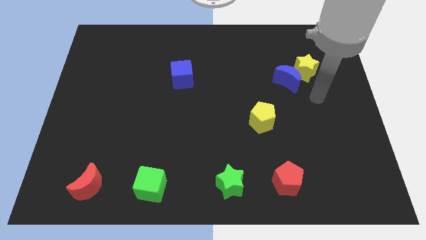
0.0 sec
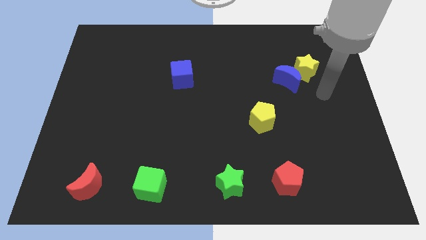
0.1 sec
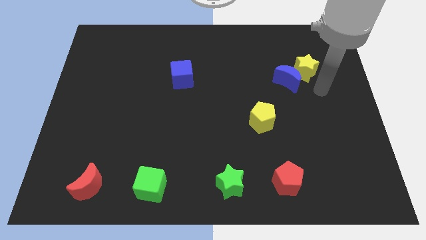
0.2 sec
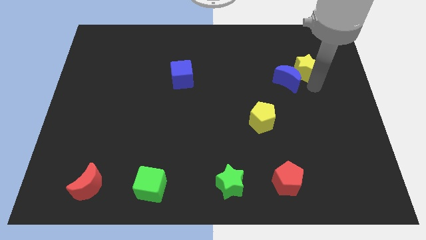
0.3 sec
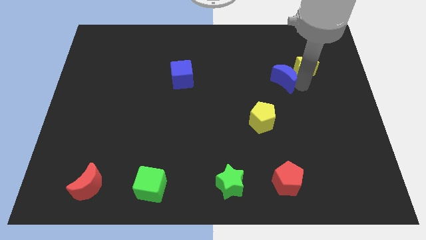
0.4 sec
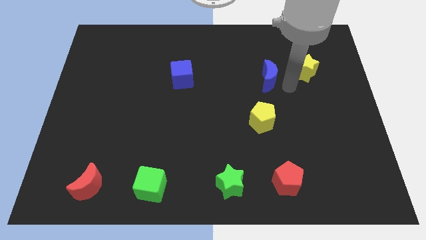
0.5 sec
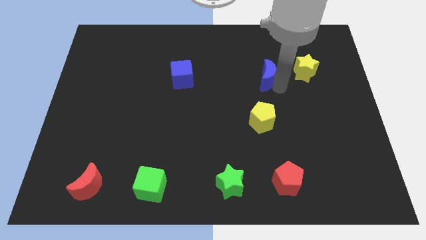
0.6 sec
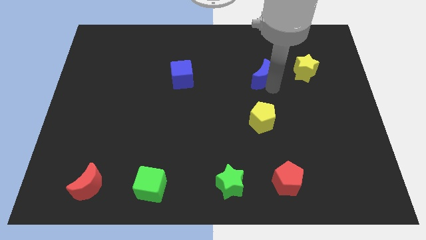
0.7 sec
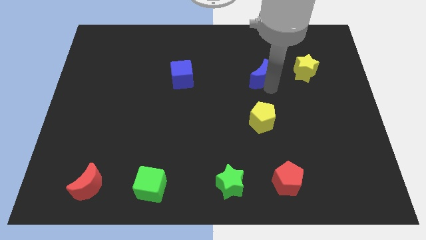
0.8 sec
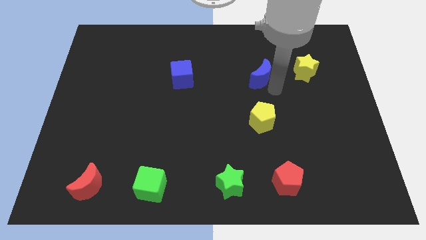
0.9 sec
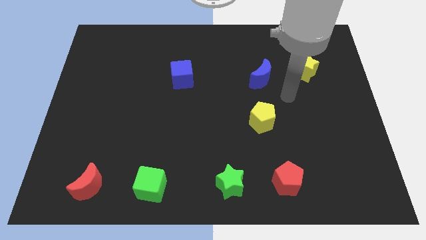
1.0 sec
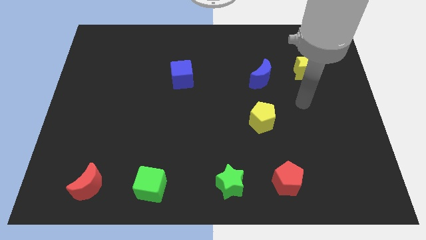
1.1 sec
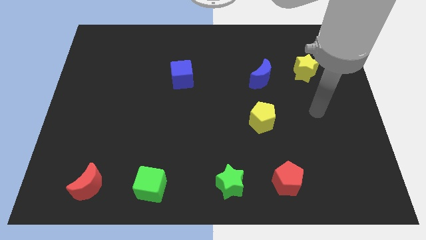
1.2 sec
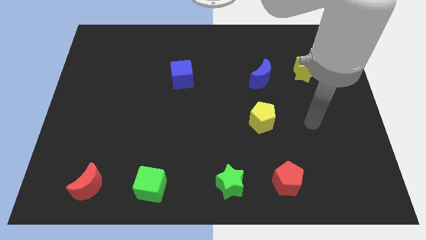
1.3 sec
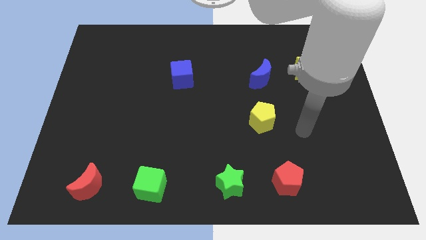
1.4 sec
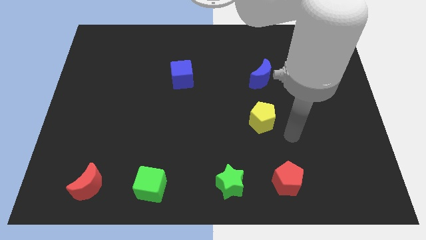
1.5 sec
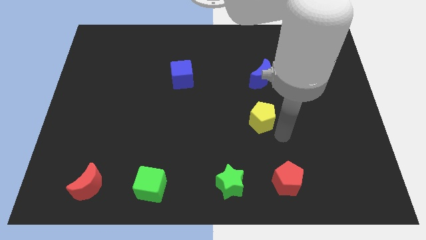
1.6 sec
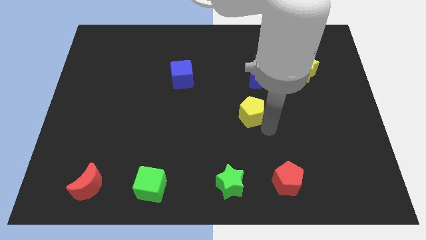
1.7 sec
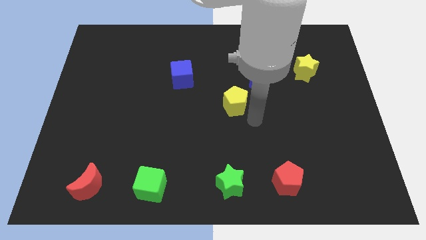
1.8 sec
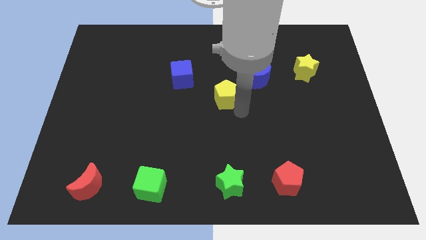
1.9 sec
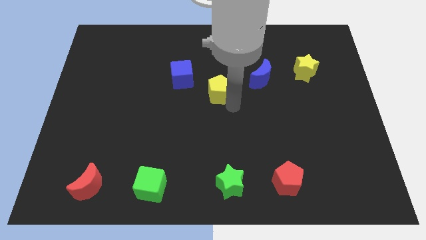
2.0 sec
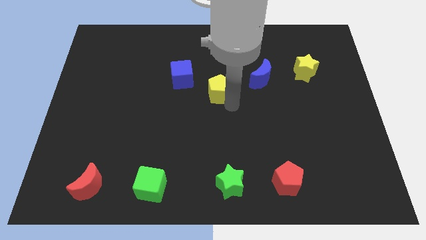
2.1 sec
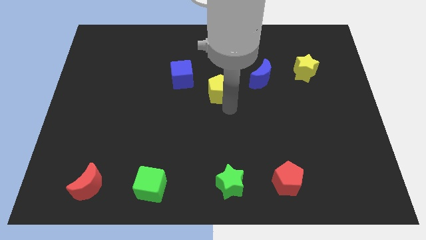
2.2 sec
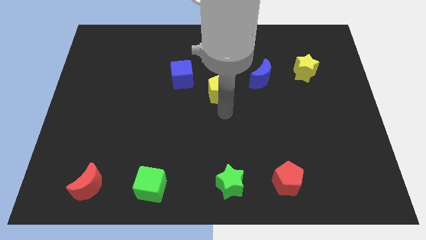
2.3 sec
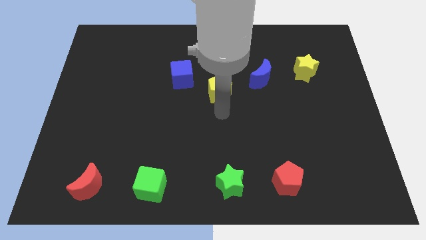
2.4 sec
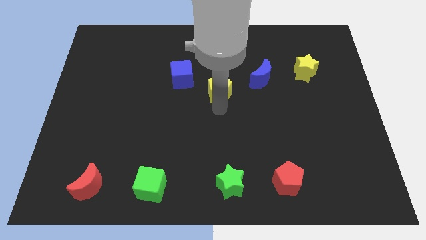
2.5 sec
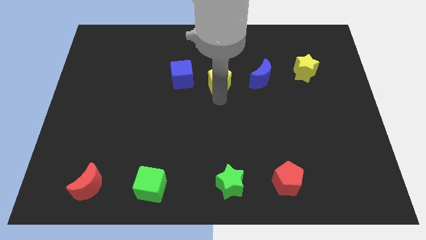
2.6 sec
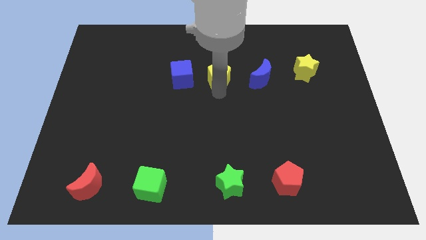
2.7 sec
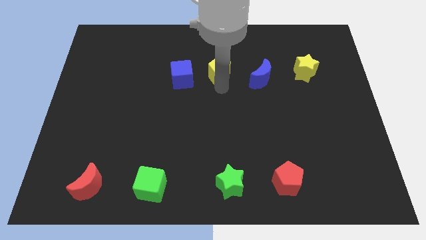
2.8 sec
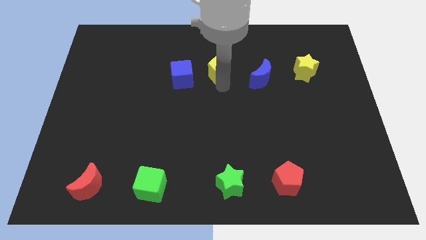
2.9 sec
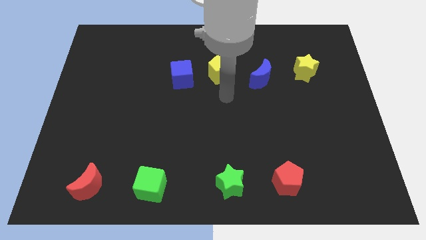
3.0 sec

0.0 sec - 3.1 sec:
place the yellow pentagon horizontal parallel to the blue cube

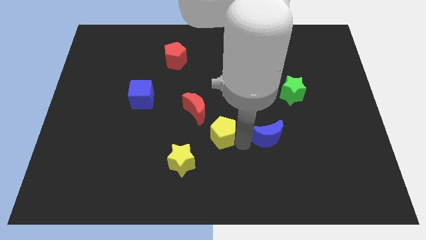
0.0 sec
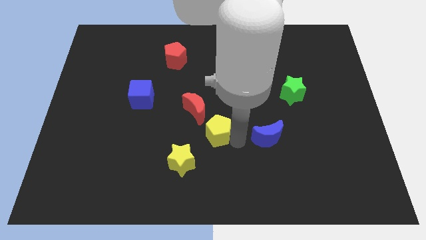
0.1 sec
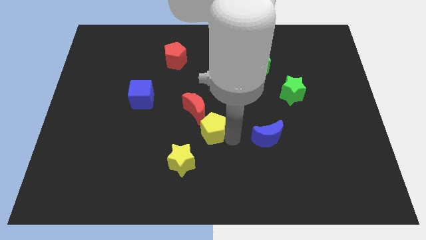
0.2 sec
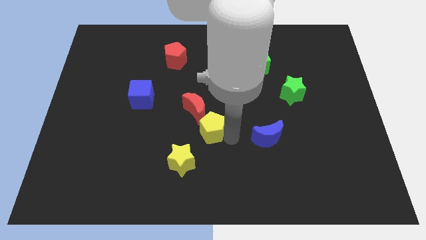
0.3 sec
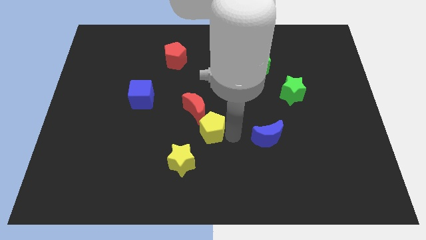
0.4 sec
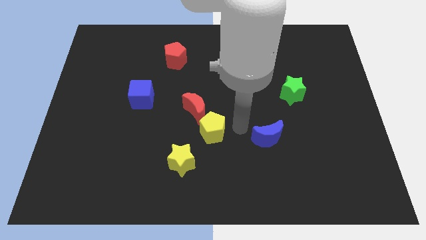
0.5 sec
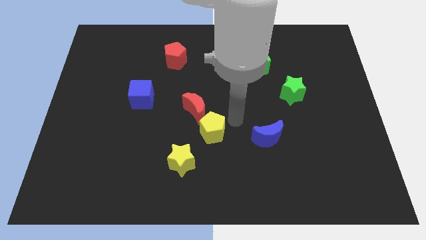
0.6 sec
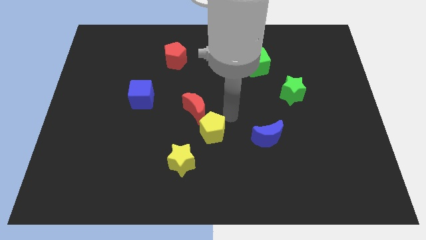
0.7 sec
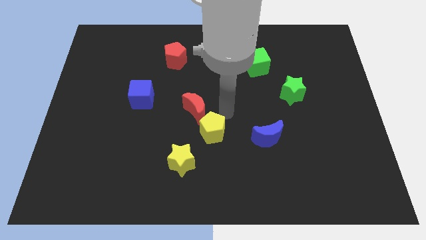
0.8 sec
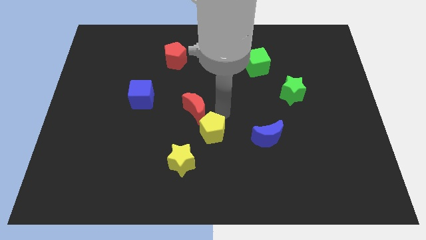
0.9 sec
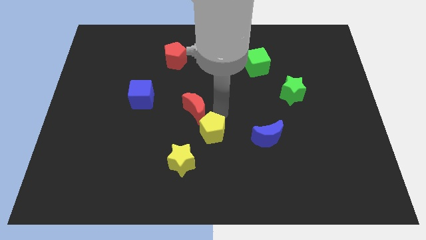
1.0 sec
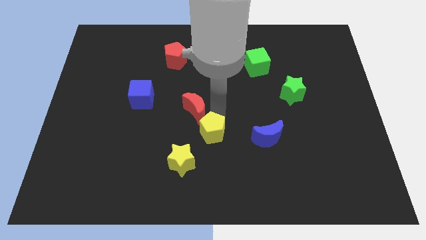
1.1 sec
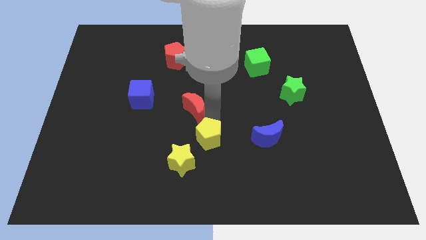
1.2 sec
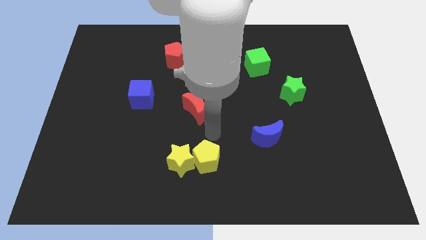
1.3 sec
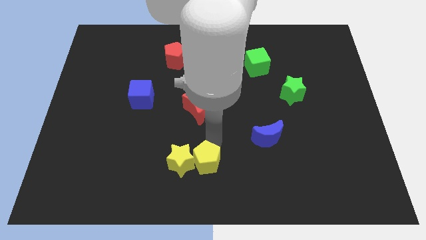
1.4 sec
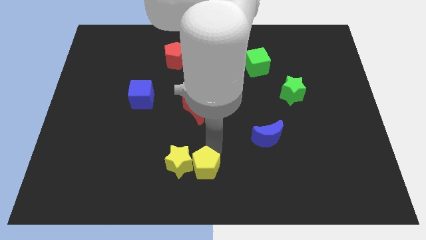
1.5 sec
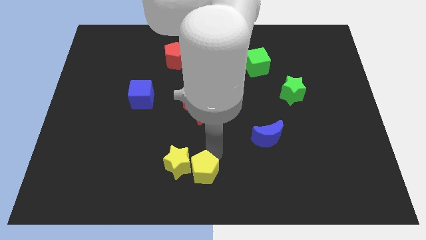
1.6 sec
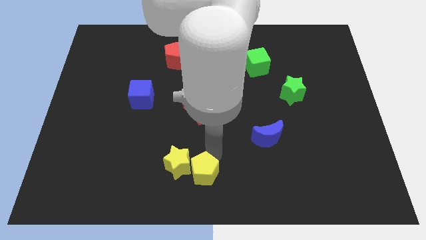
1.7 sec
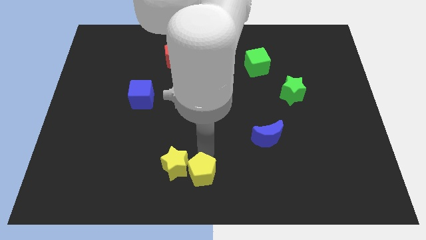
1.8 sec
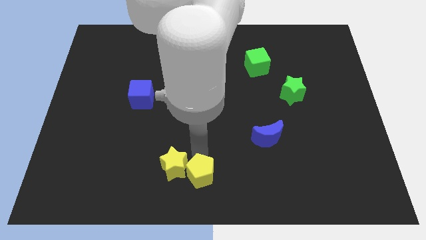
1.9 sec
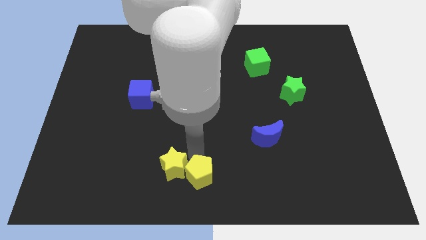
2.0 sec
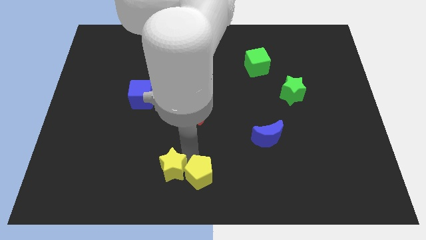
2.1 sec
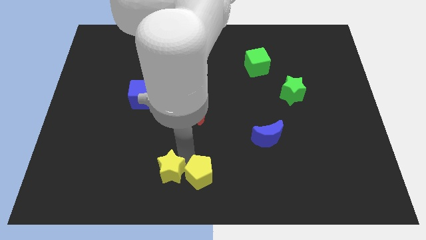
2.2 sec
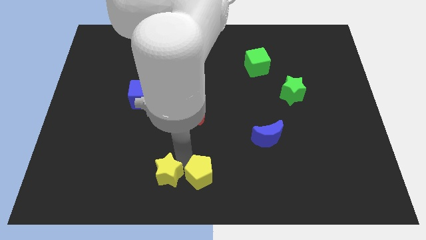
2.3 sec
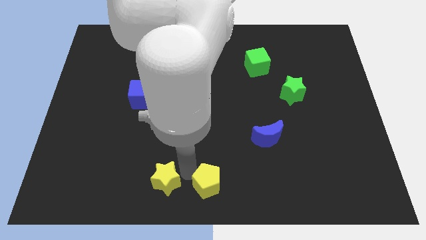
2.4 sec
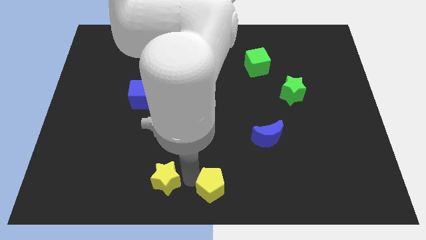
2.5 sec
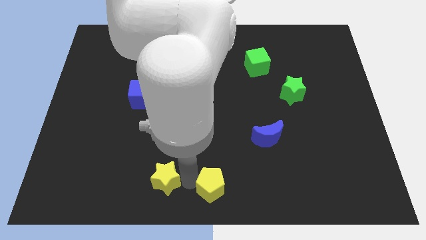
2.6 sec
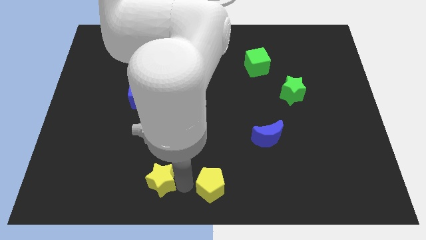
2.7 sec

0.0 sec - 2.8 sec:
move the yellow pentagon to the right of the yellow star

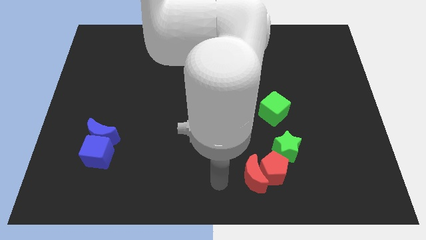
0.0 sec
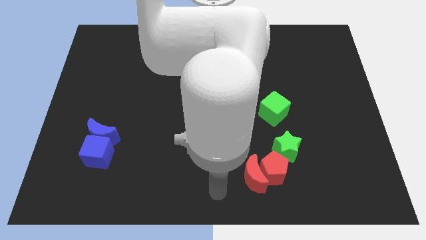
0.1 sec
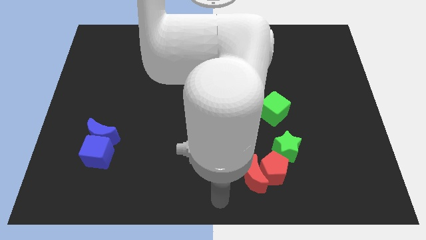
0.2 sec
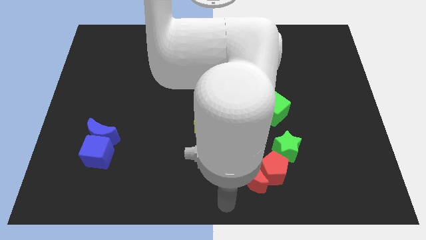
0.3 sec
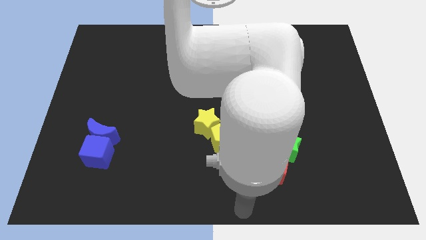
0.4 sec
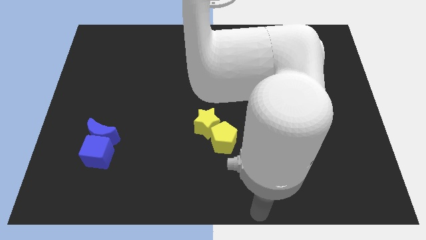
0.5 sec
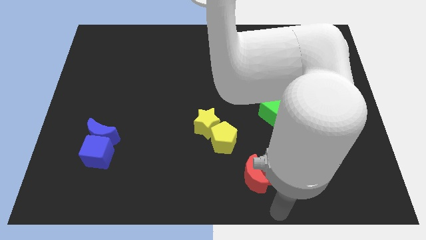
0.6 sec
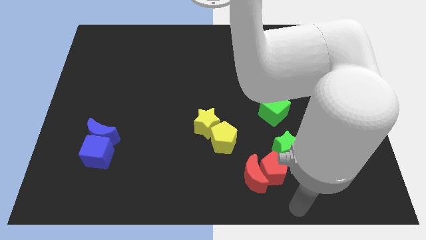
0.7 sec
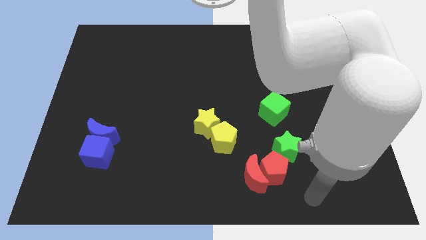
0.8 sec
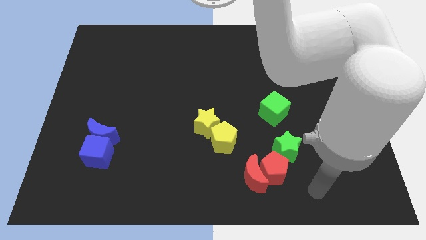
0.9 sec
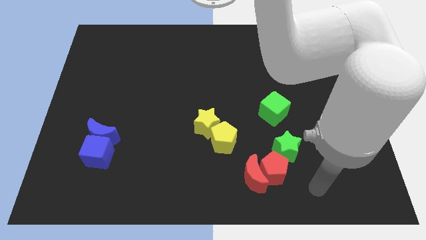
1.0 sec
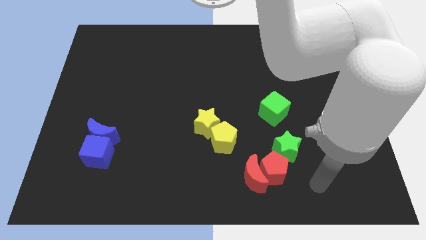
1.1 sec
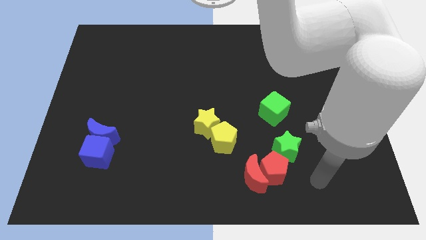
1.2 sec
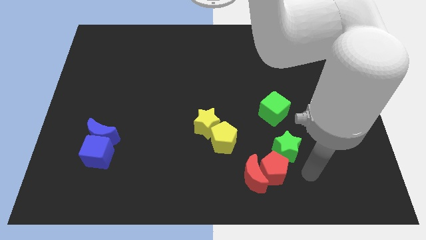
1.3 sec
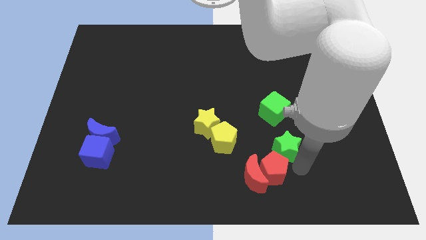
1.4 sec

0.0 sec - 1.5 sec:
move your arm towards the green star

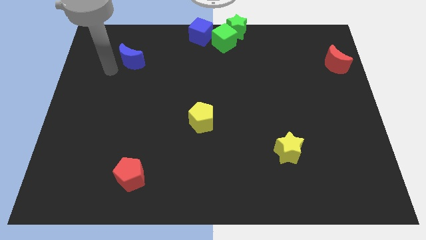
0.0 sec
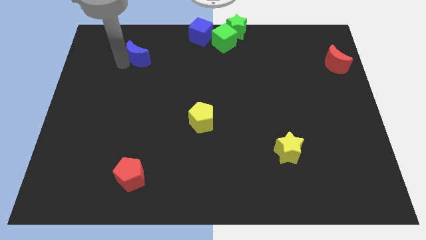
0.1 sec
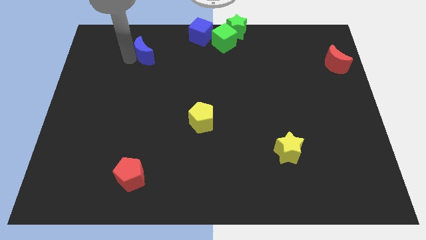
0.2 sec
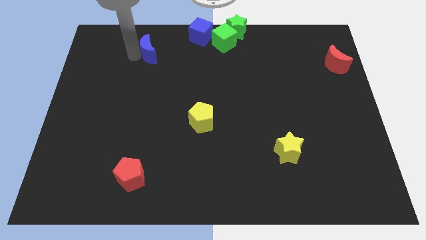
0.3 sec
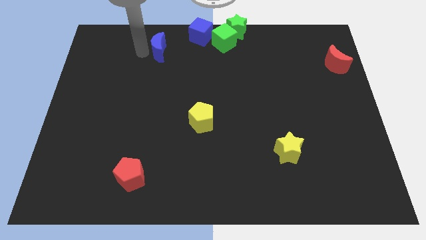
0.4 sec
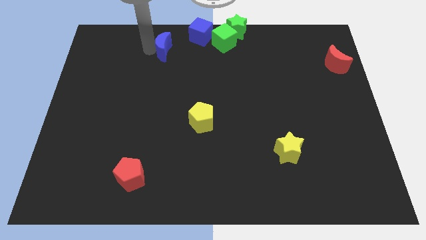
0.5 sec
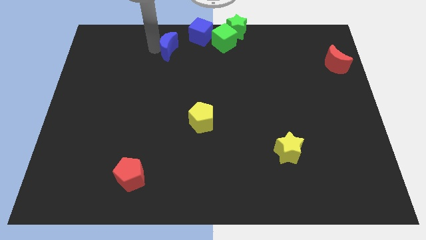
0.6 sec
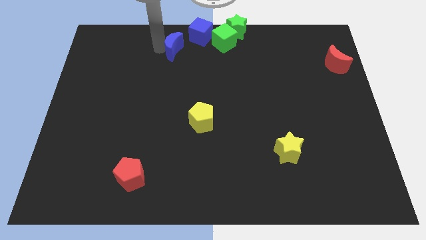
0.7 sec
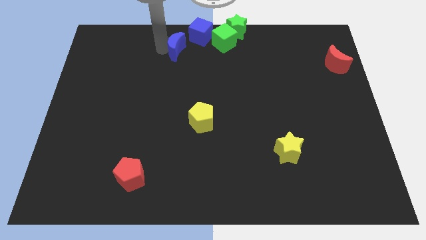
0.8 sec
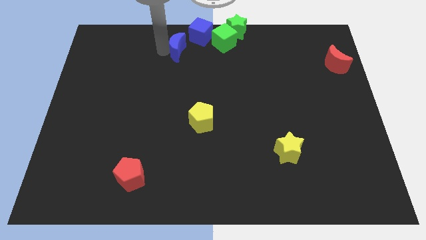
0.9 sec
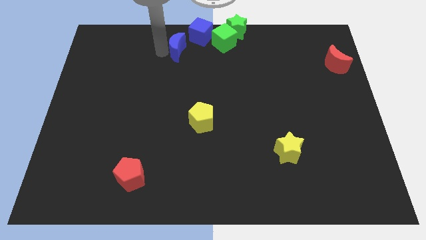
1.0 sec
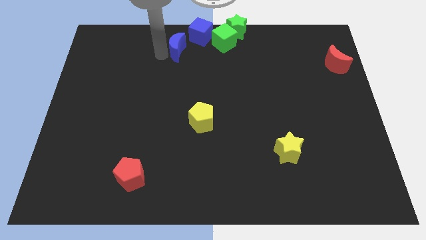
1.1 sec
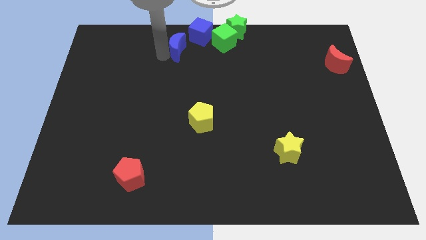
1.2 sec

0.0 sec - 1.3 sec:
move the blue crescent towards the blue cube

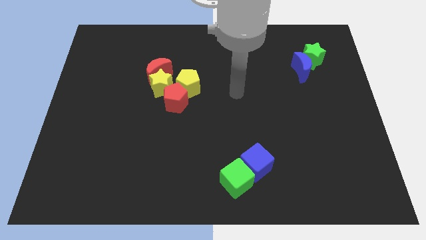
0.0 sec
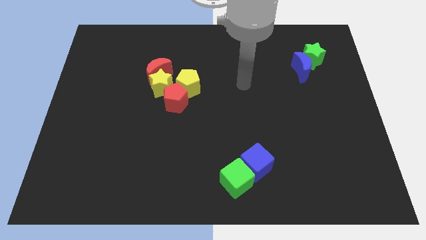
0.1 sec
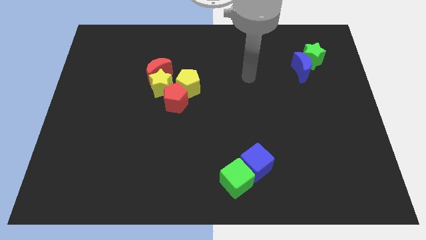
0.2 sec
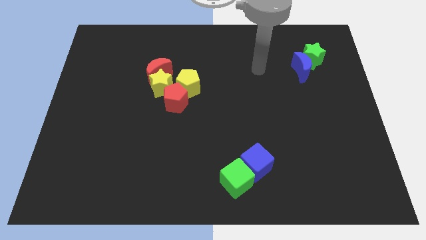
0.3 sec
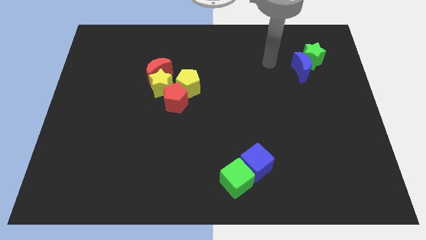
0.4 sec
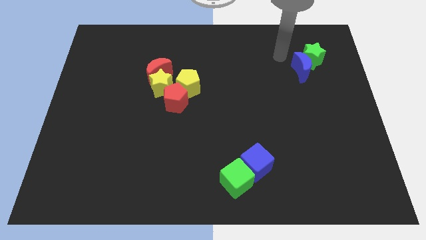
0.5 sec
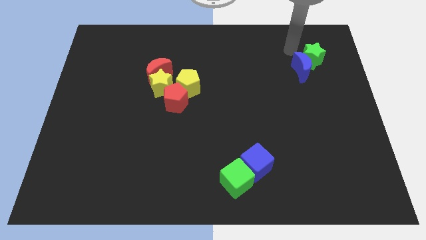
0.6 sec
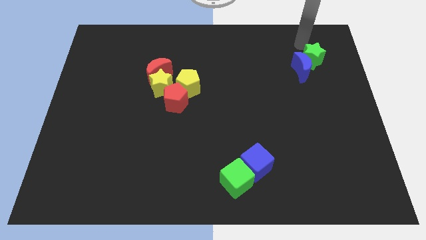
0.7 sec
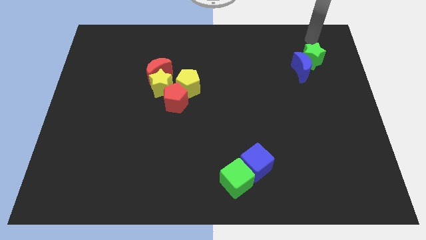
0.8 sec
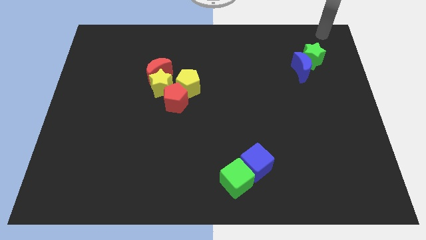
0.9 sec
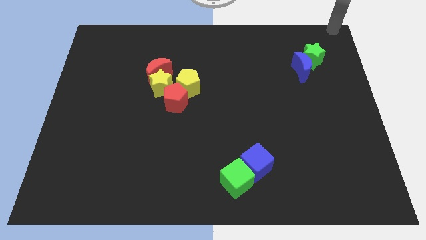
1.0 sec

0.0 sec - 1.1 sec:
point your arm at the top right corner of the board
